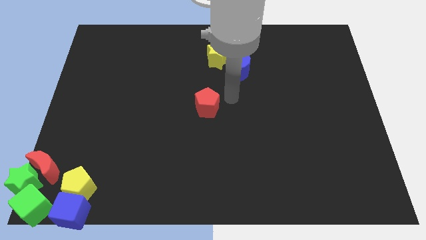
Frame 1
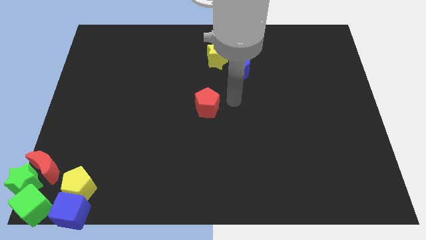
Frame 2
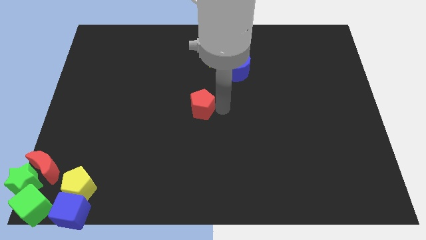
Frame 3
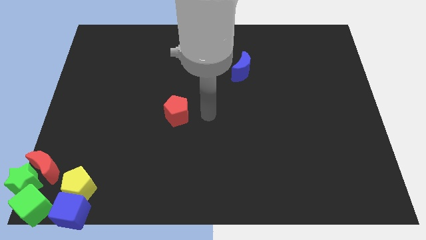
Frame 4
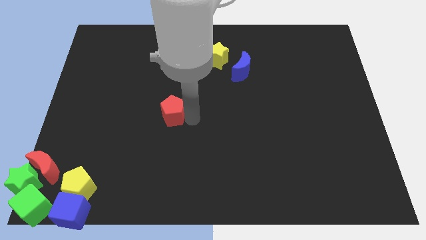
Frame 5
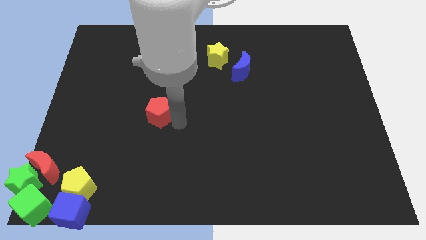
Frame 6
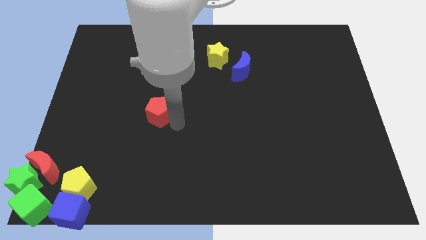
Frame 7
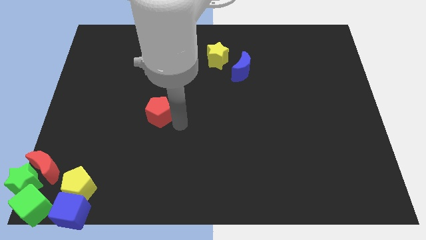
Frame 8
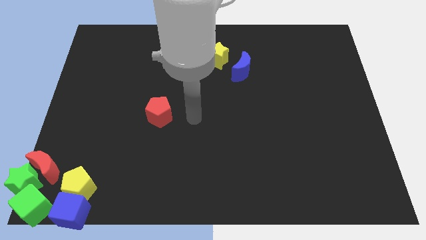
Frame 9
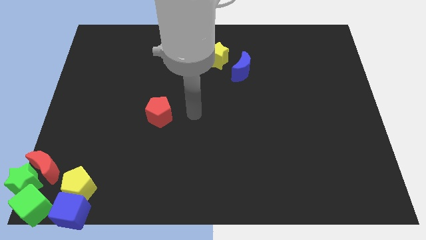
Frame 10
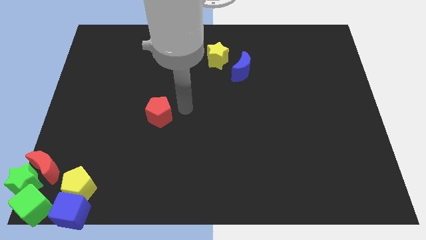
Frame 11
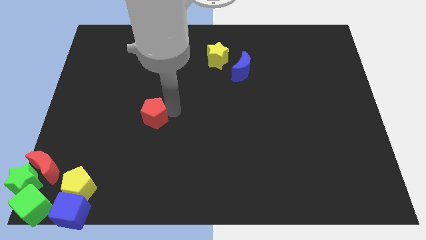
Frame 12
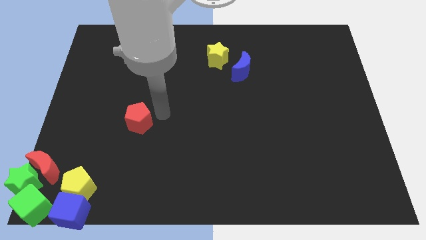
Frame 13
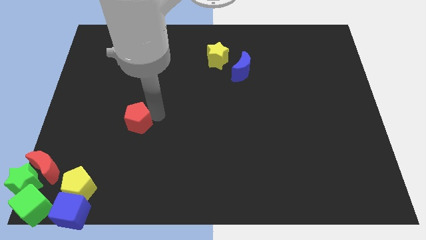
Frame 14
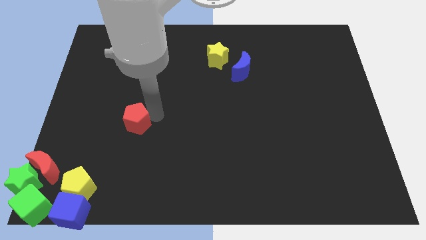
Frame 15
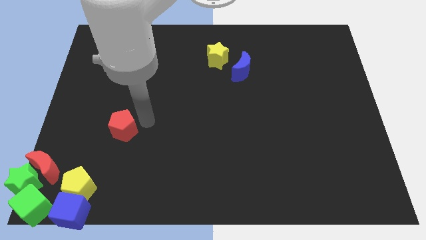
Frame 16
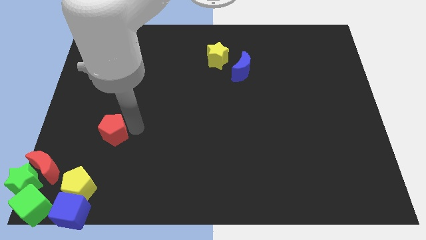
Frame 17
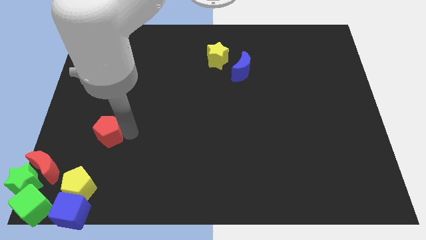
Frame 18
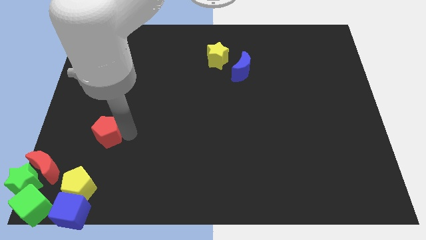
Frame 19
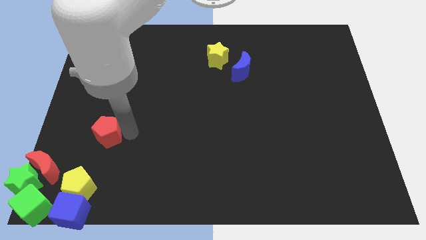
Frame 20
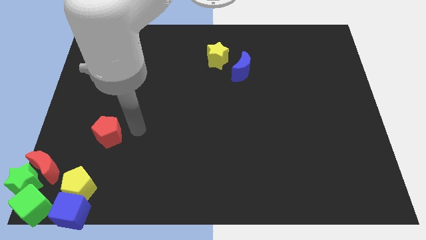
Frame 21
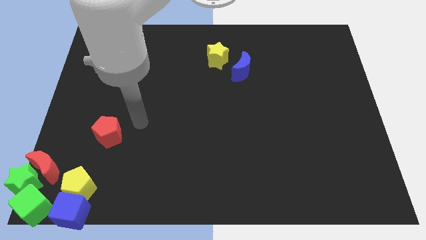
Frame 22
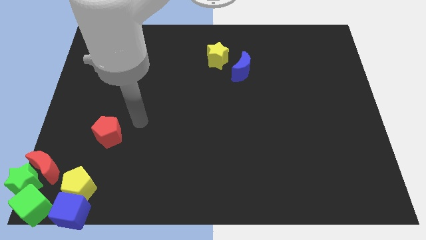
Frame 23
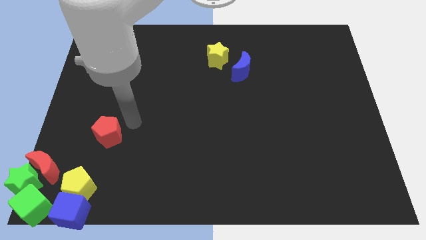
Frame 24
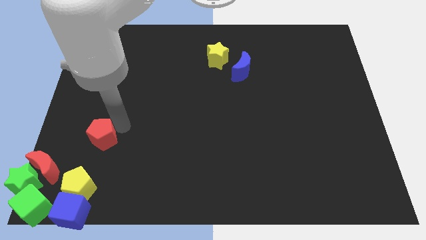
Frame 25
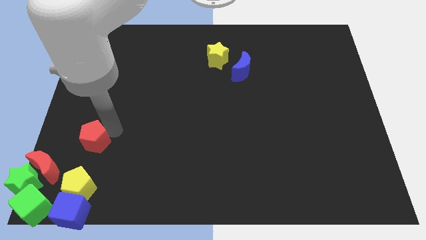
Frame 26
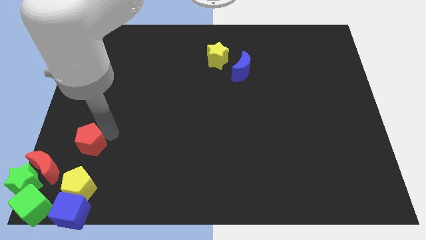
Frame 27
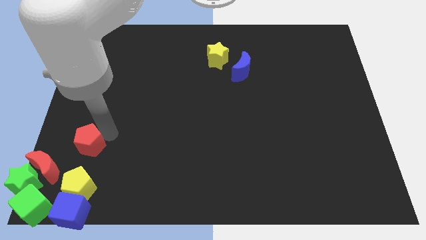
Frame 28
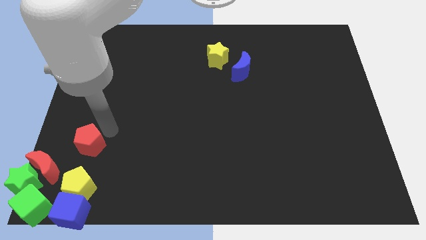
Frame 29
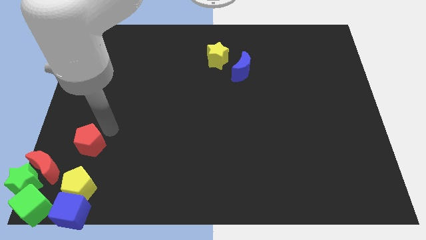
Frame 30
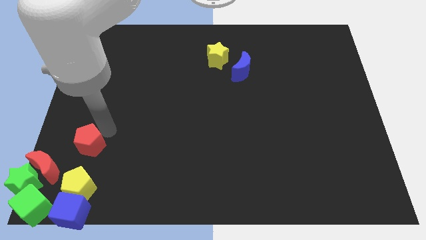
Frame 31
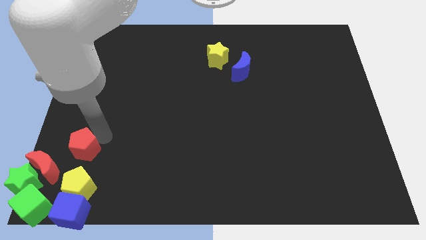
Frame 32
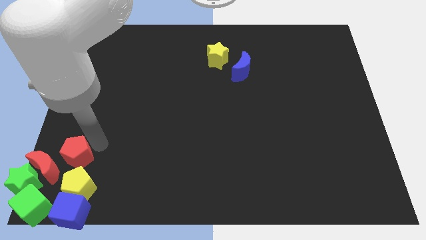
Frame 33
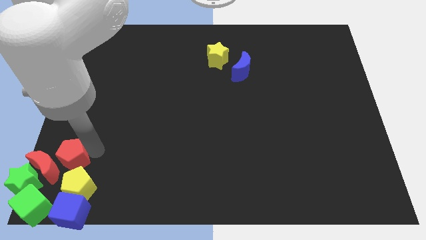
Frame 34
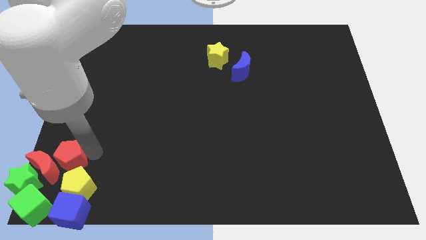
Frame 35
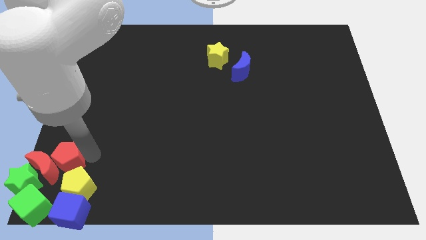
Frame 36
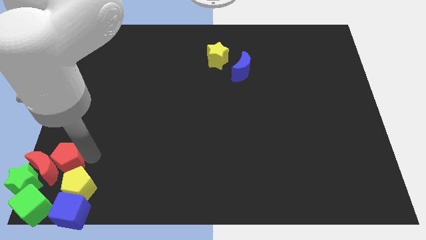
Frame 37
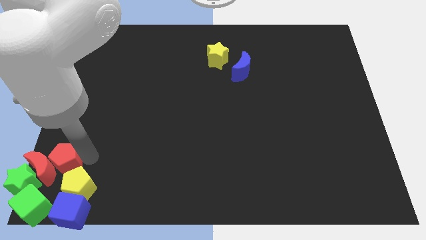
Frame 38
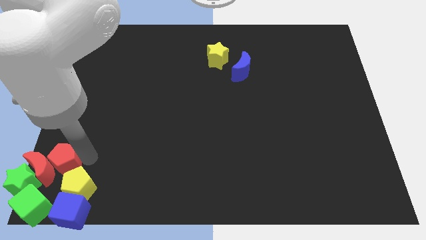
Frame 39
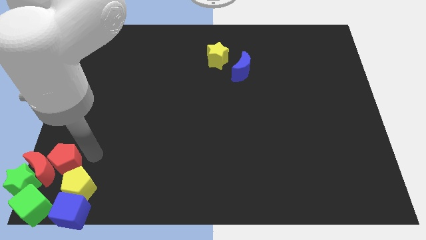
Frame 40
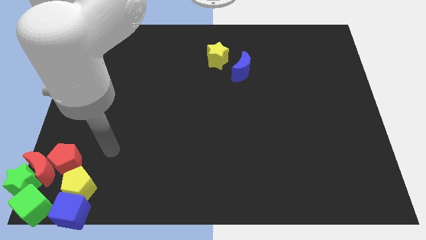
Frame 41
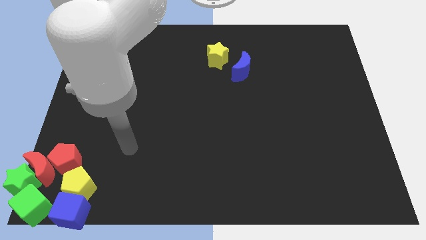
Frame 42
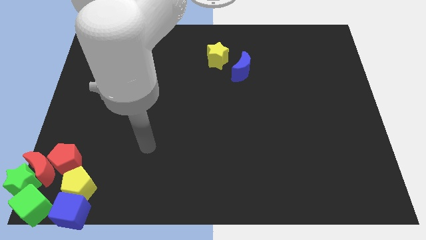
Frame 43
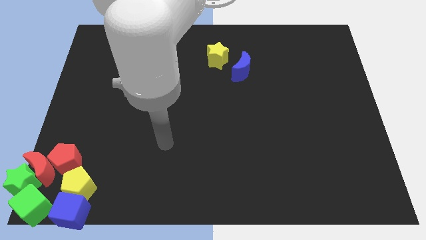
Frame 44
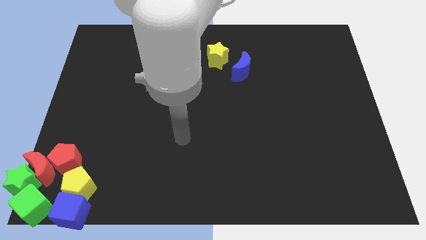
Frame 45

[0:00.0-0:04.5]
place the red pentagon towards the top left side of the yellow pentagon

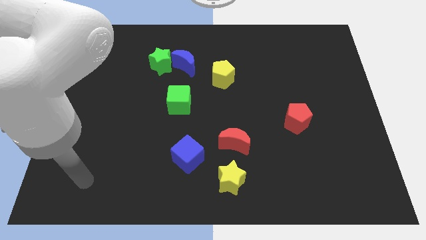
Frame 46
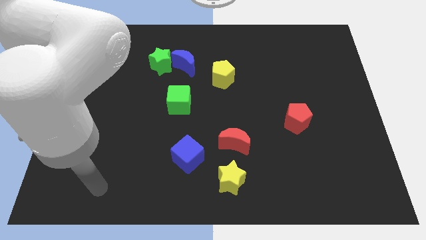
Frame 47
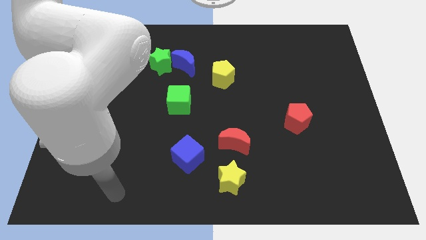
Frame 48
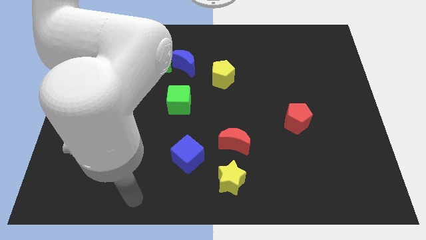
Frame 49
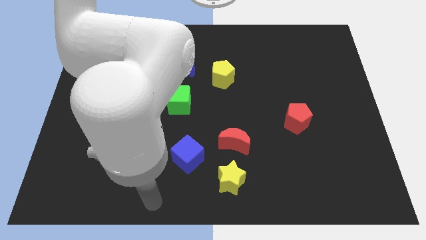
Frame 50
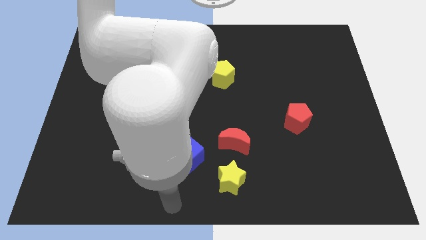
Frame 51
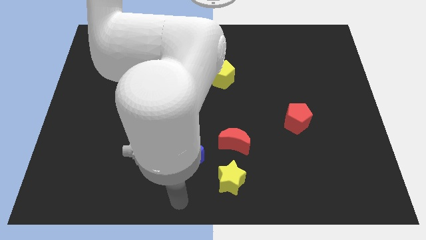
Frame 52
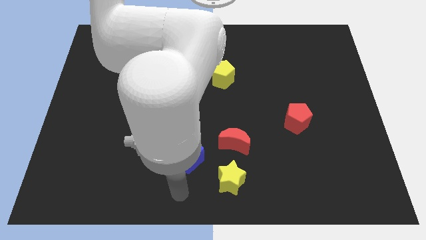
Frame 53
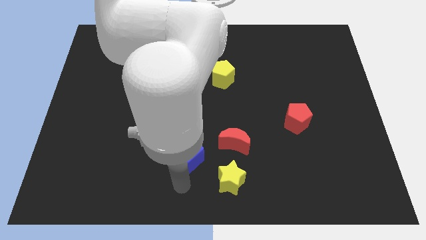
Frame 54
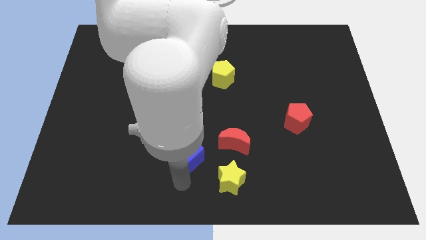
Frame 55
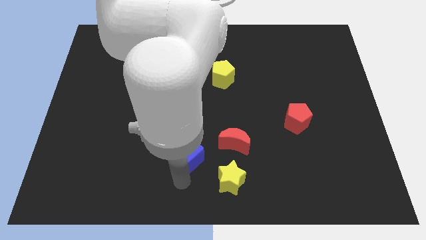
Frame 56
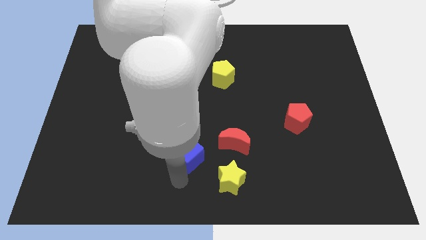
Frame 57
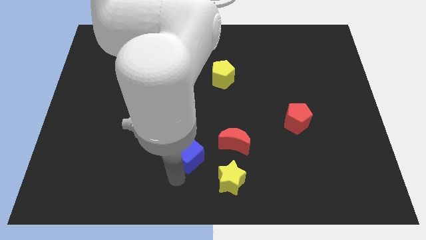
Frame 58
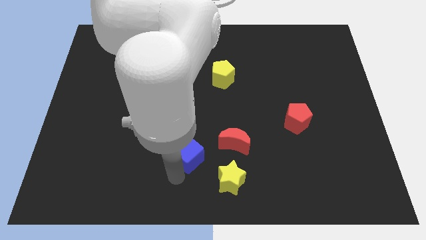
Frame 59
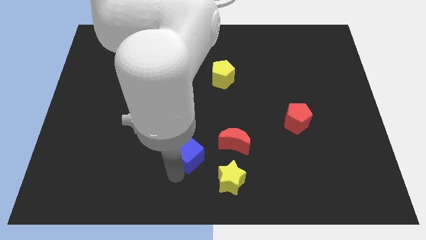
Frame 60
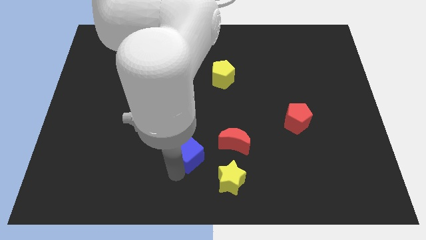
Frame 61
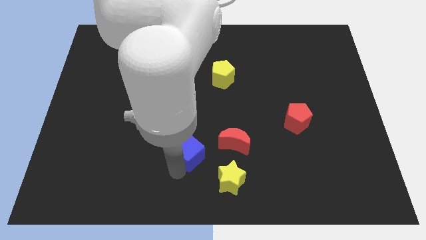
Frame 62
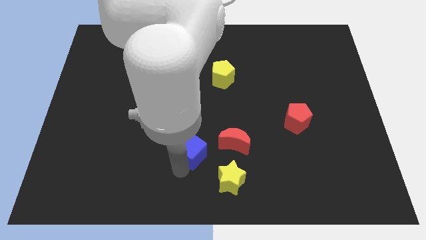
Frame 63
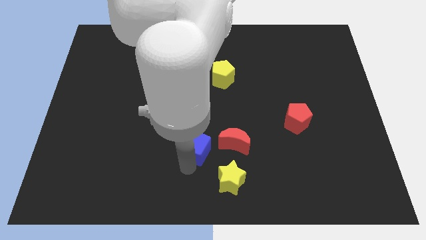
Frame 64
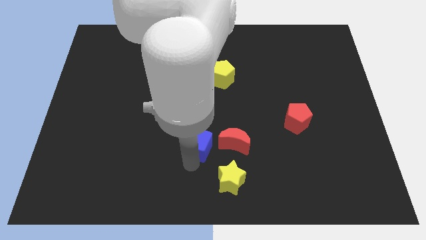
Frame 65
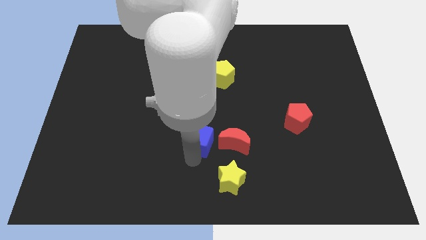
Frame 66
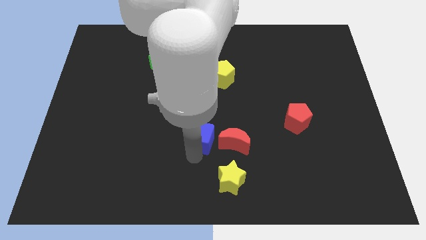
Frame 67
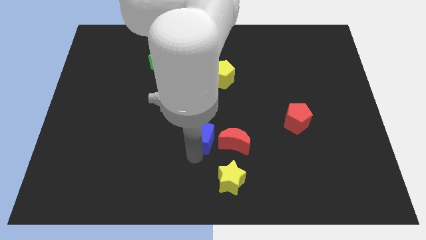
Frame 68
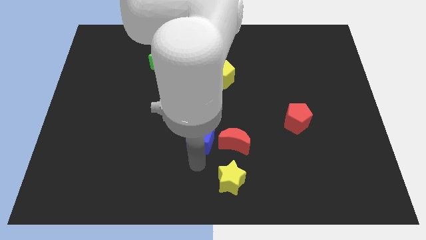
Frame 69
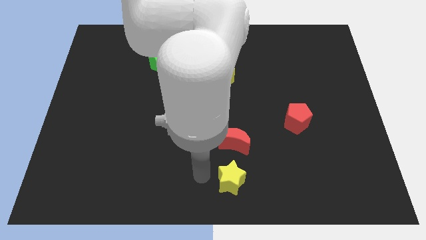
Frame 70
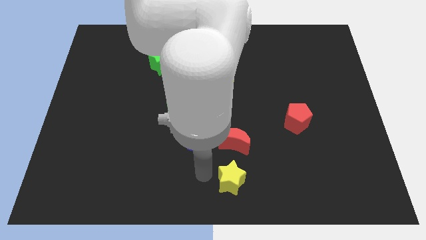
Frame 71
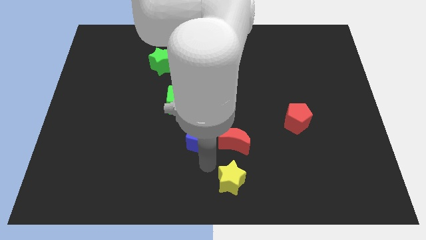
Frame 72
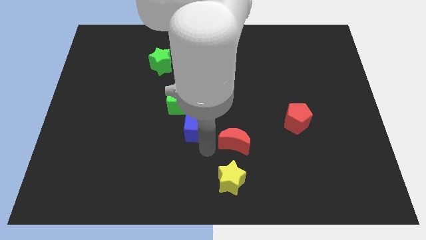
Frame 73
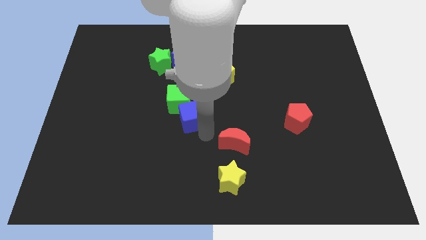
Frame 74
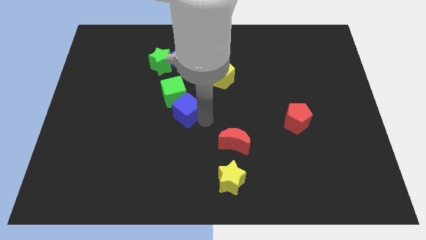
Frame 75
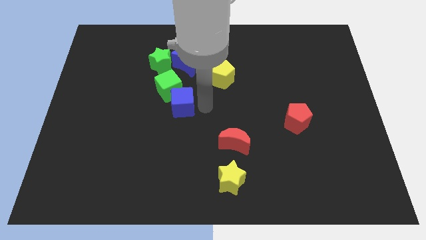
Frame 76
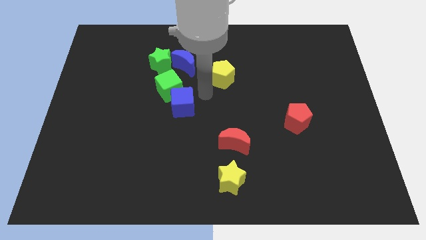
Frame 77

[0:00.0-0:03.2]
push the blue cube into the green cube

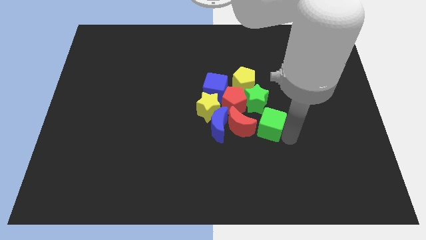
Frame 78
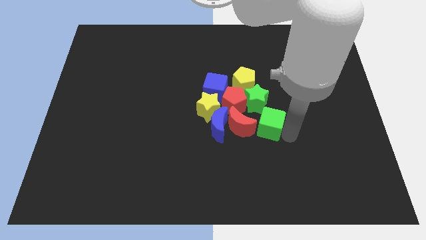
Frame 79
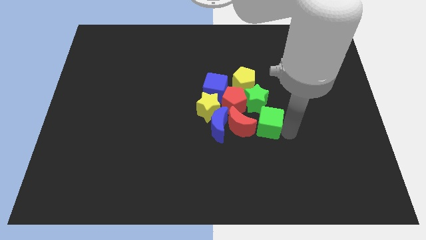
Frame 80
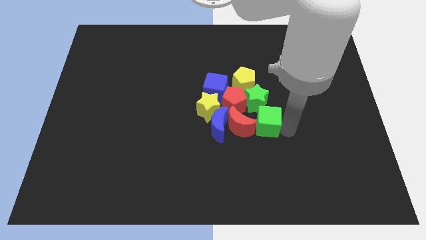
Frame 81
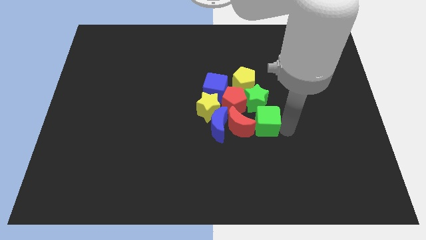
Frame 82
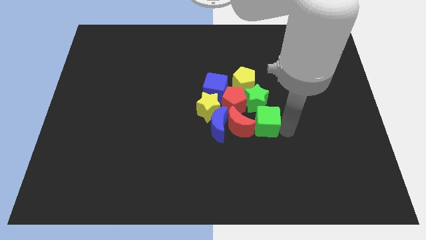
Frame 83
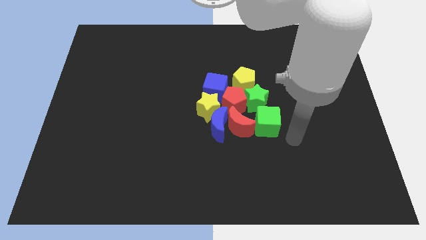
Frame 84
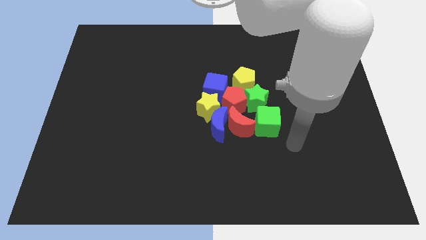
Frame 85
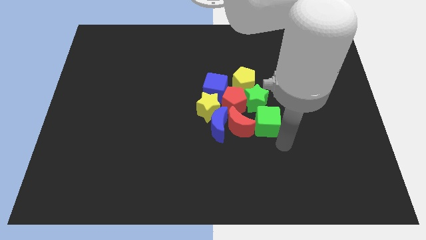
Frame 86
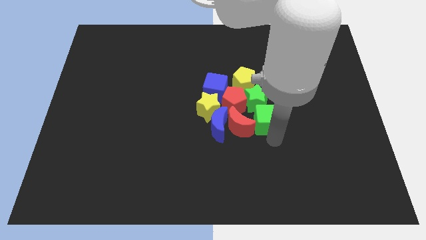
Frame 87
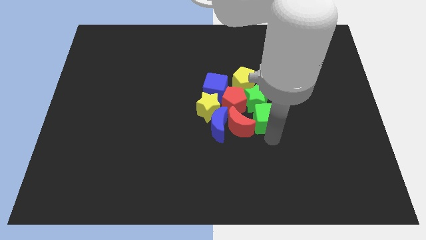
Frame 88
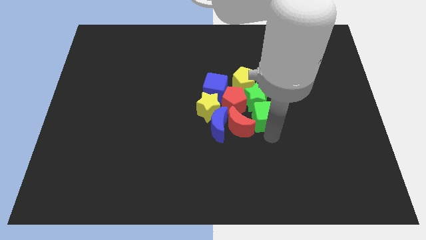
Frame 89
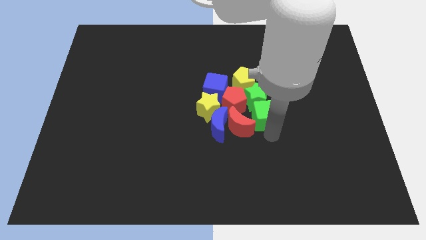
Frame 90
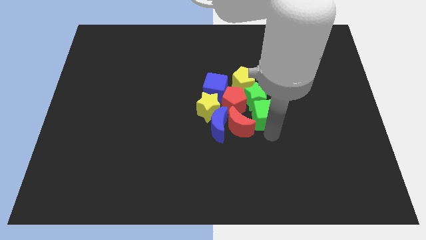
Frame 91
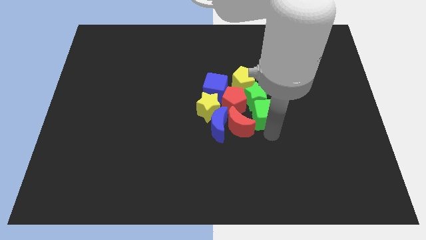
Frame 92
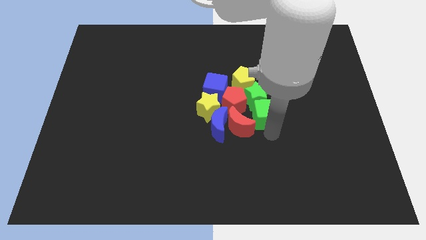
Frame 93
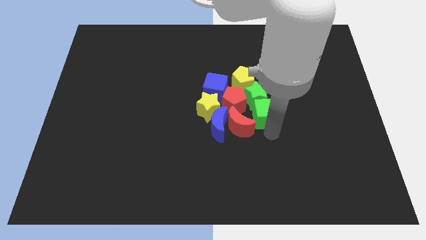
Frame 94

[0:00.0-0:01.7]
push the green cube into the green star
